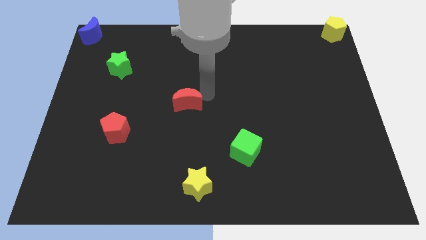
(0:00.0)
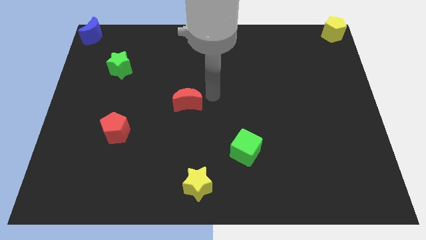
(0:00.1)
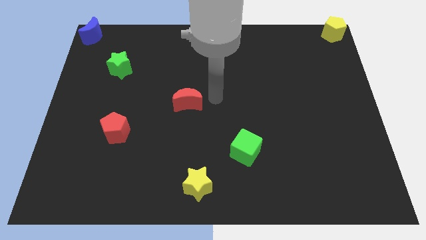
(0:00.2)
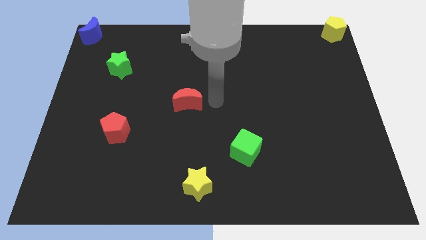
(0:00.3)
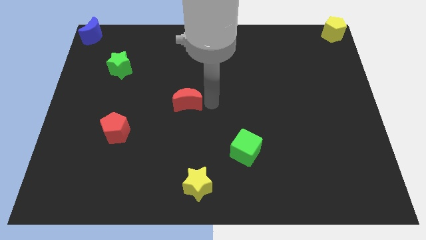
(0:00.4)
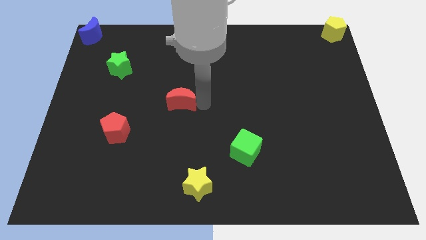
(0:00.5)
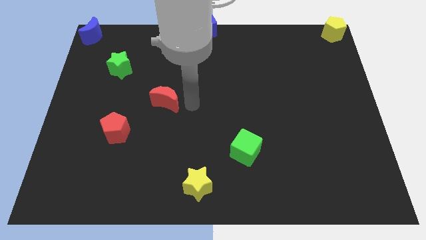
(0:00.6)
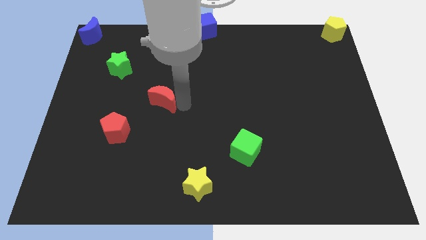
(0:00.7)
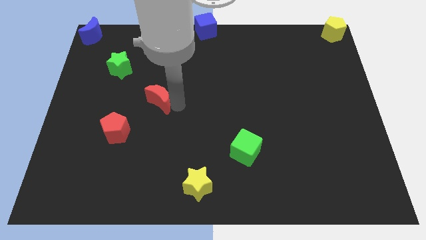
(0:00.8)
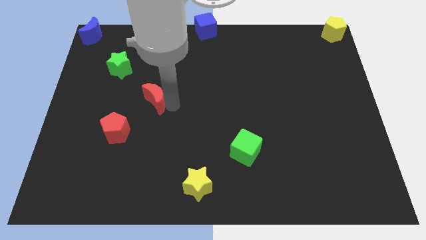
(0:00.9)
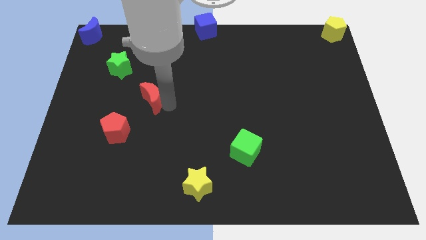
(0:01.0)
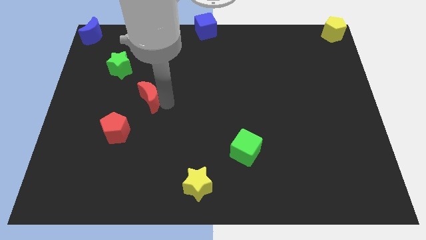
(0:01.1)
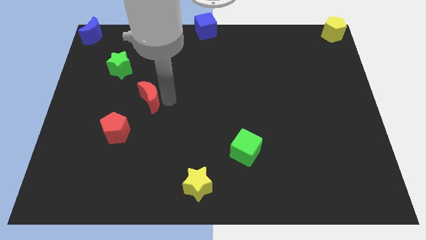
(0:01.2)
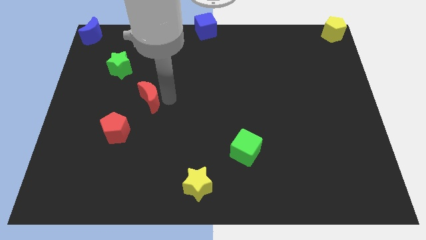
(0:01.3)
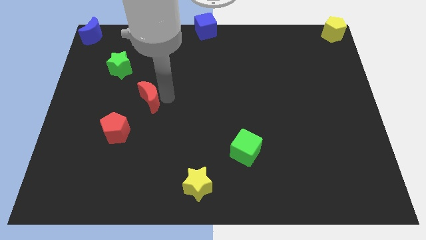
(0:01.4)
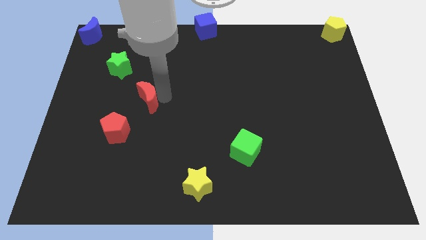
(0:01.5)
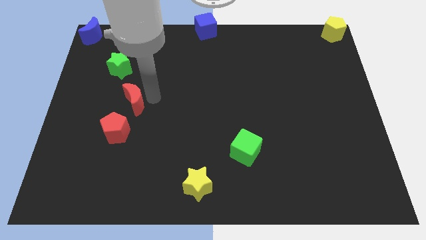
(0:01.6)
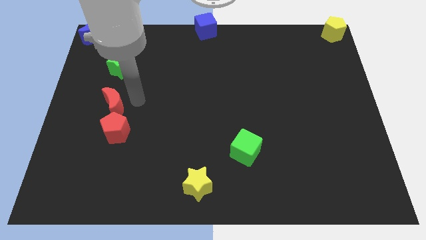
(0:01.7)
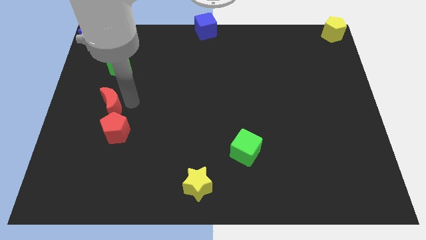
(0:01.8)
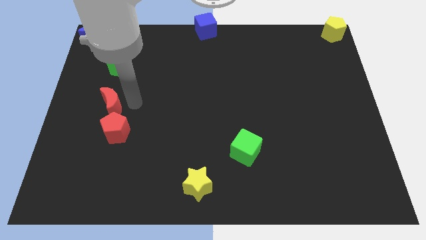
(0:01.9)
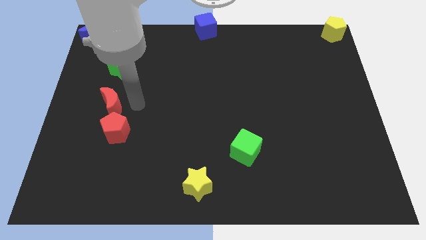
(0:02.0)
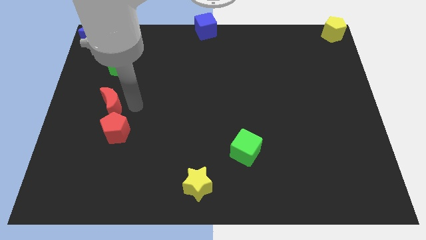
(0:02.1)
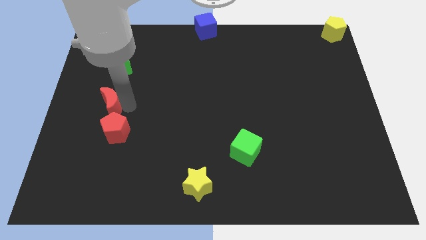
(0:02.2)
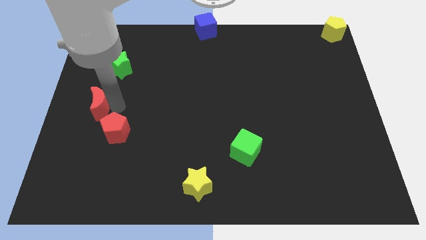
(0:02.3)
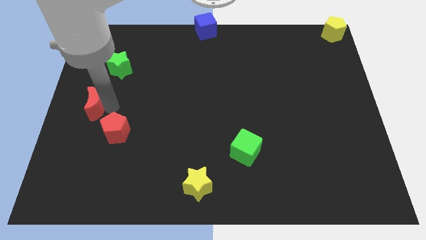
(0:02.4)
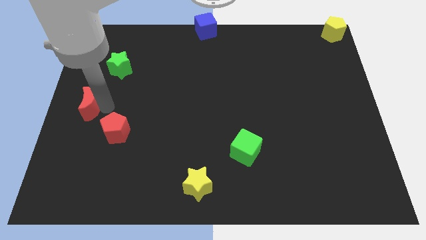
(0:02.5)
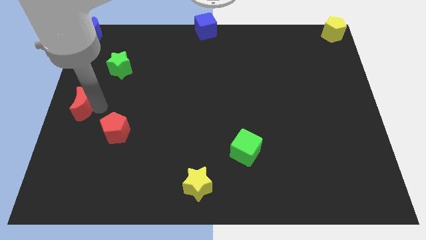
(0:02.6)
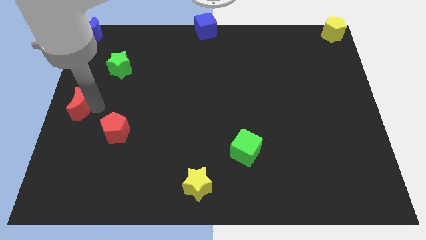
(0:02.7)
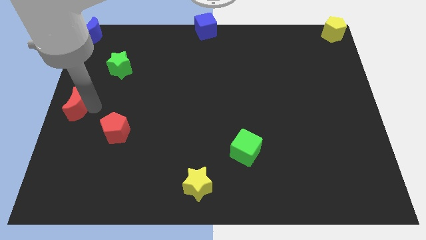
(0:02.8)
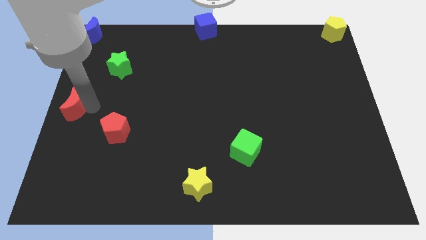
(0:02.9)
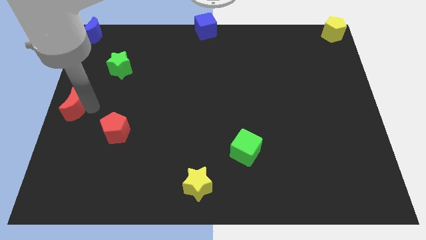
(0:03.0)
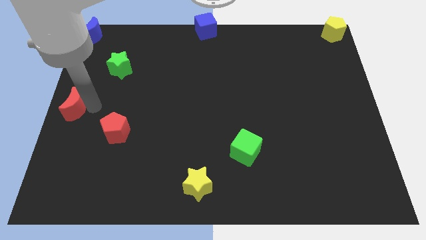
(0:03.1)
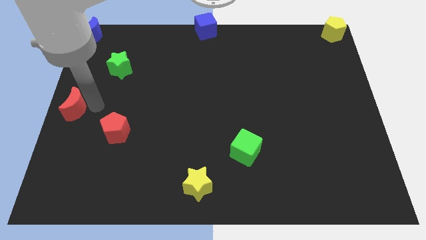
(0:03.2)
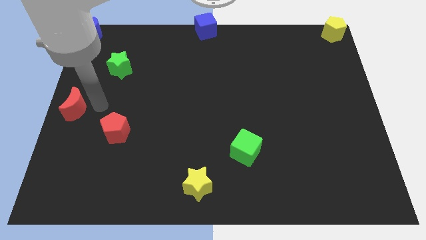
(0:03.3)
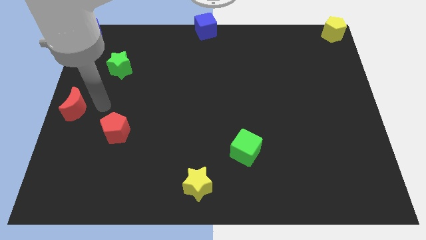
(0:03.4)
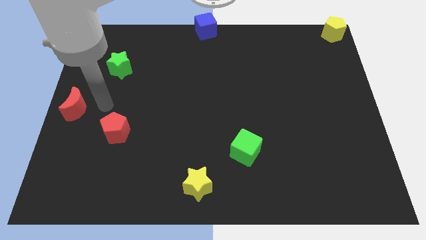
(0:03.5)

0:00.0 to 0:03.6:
slide the red crescent to the center left of the board

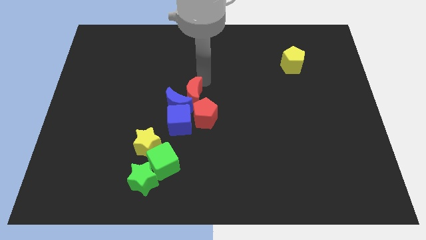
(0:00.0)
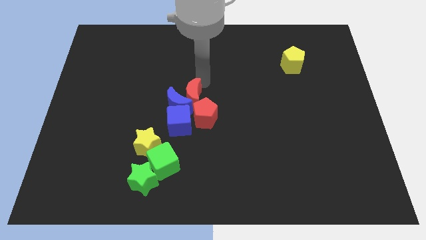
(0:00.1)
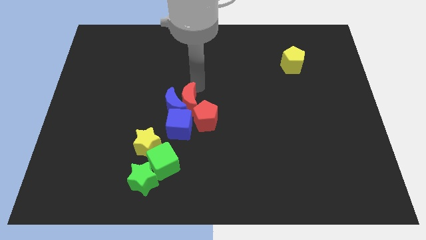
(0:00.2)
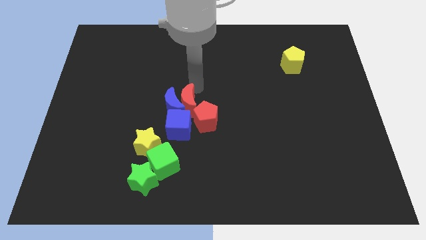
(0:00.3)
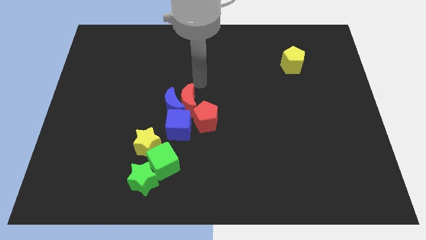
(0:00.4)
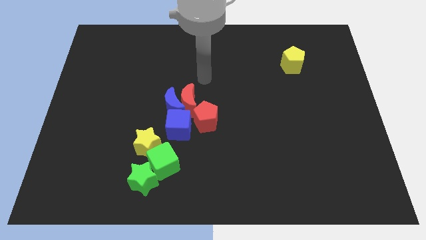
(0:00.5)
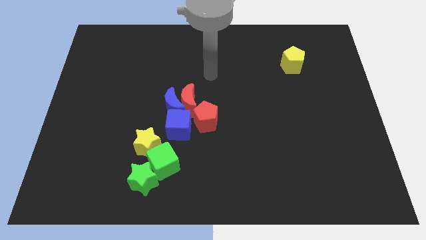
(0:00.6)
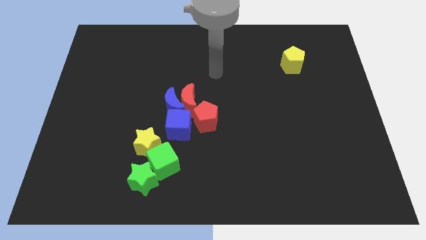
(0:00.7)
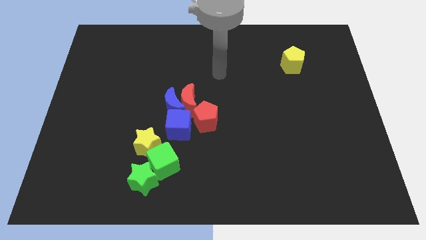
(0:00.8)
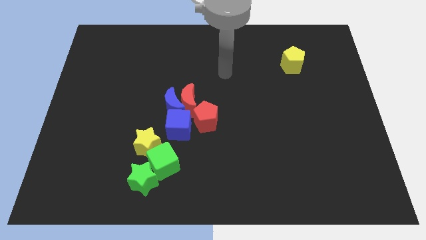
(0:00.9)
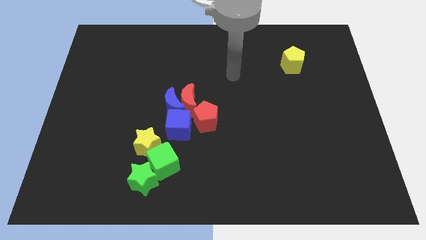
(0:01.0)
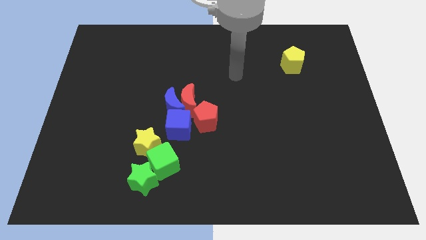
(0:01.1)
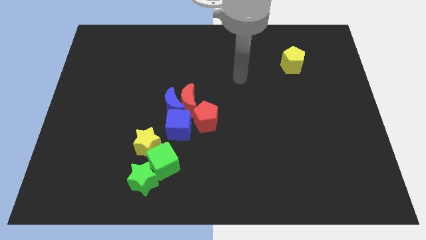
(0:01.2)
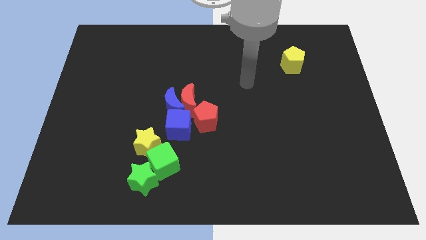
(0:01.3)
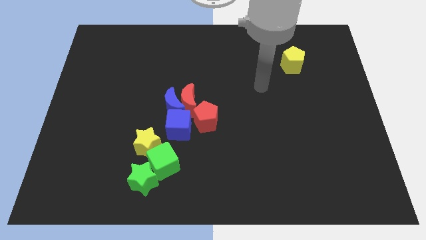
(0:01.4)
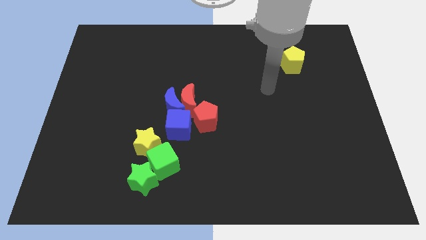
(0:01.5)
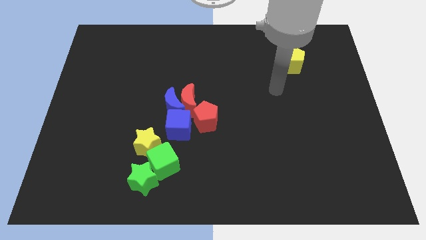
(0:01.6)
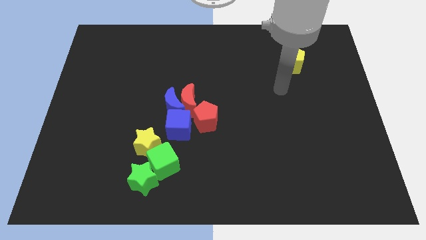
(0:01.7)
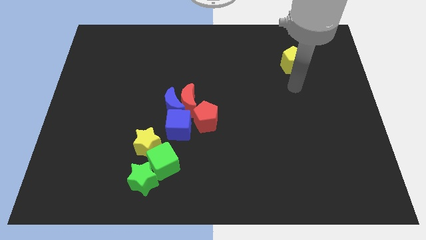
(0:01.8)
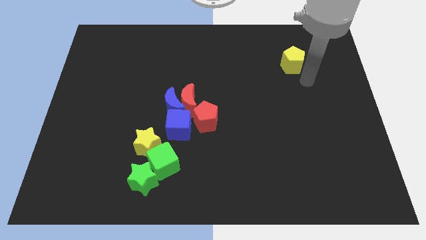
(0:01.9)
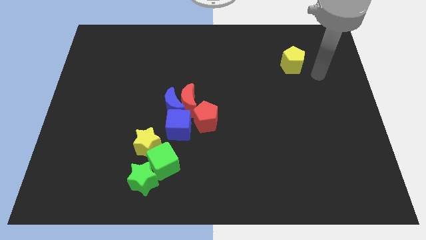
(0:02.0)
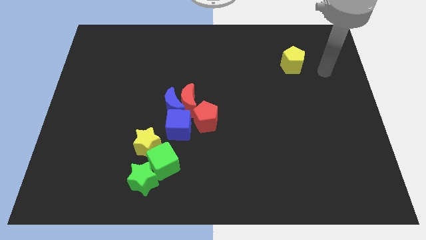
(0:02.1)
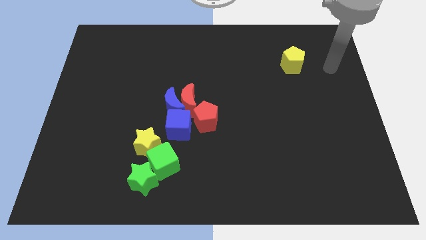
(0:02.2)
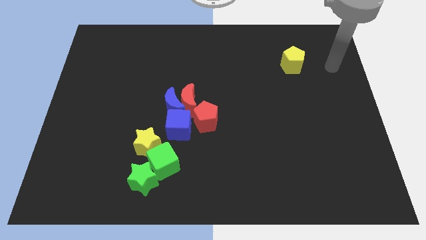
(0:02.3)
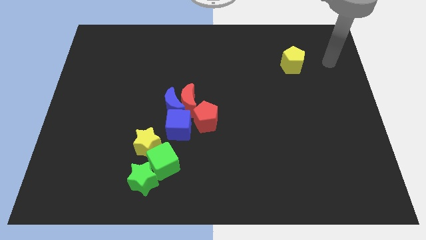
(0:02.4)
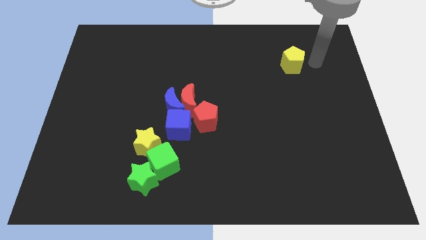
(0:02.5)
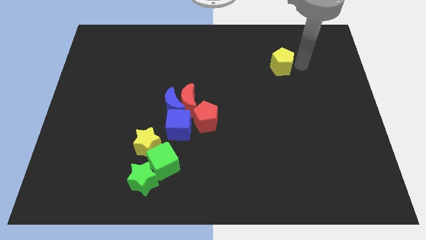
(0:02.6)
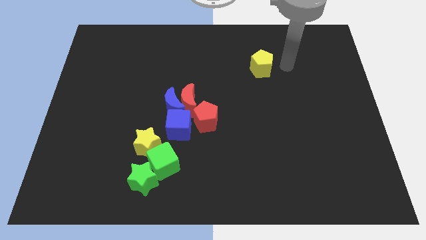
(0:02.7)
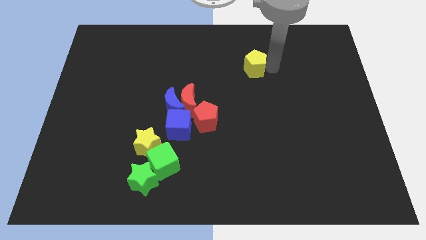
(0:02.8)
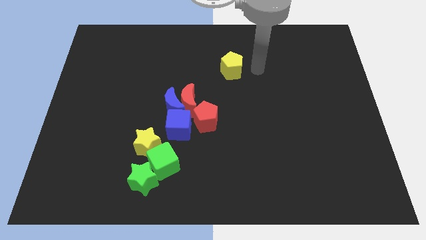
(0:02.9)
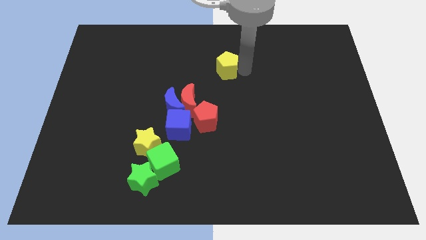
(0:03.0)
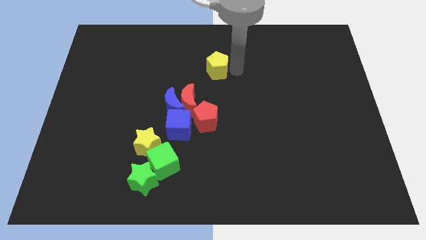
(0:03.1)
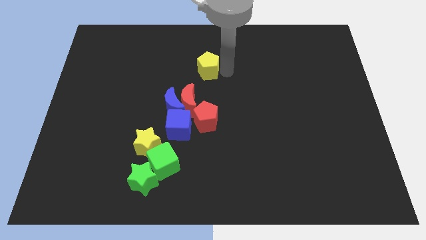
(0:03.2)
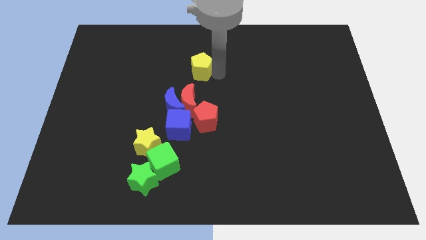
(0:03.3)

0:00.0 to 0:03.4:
move the yellow pentagon above the red crescent

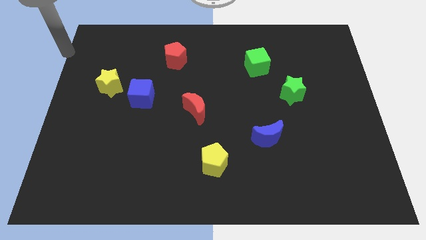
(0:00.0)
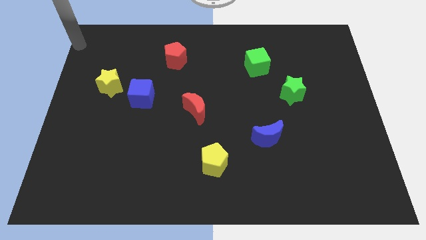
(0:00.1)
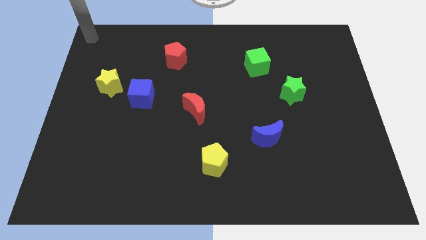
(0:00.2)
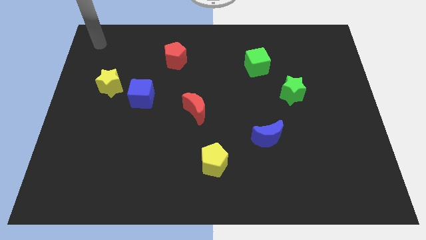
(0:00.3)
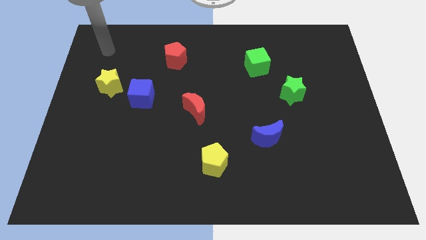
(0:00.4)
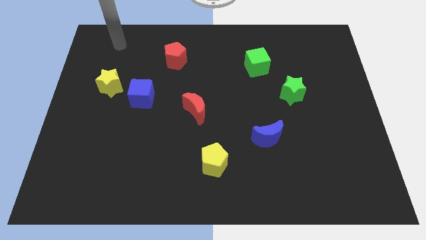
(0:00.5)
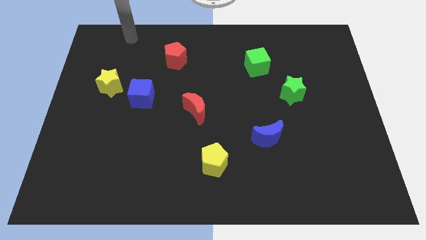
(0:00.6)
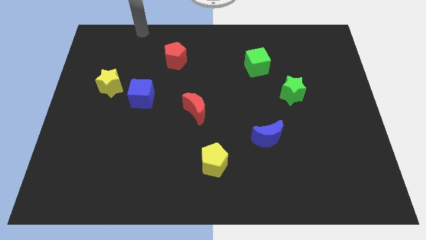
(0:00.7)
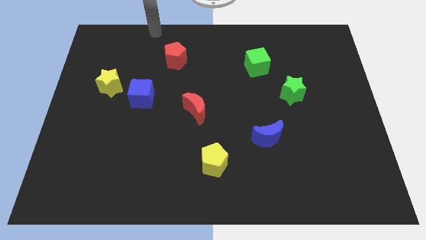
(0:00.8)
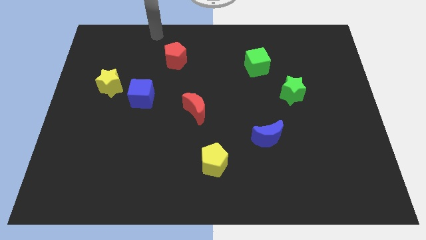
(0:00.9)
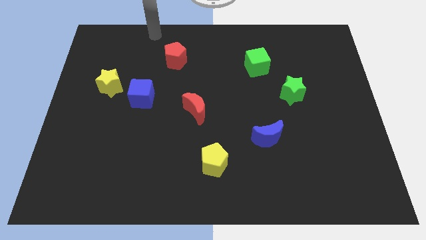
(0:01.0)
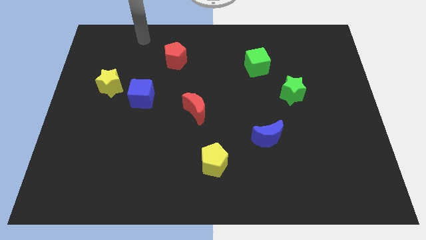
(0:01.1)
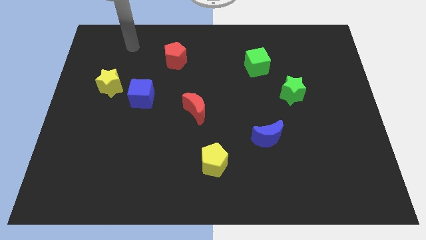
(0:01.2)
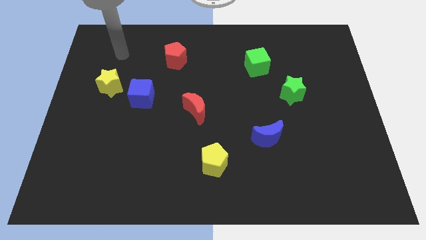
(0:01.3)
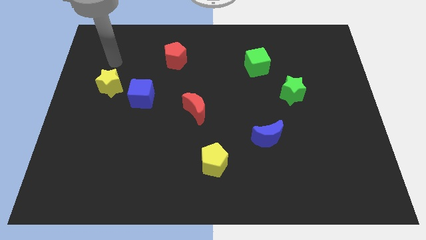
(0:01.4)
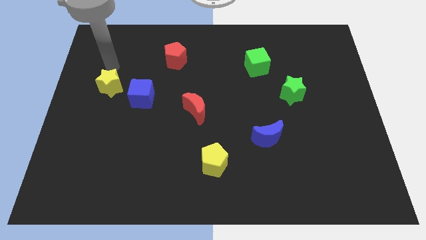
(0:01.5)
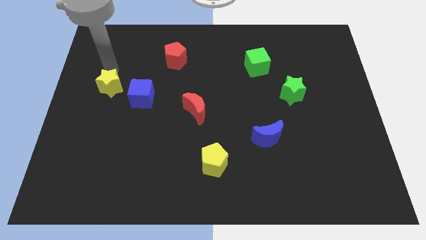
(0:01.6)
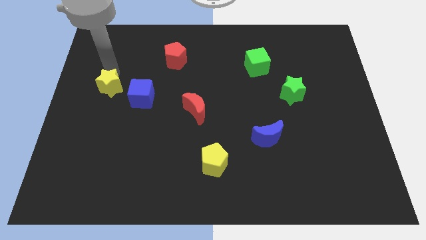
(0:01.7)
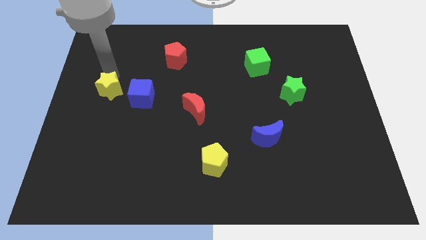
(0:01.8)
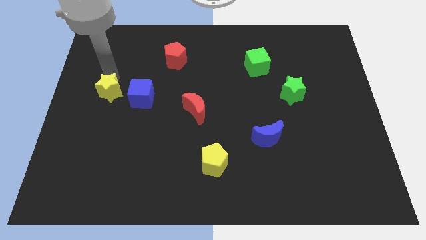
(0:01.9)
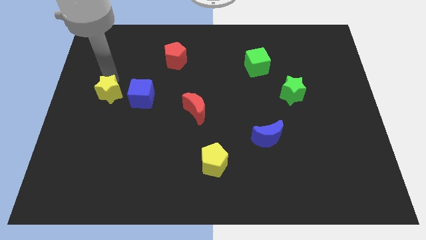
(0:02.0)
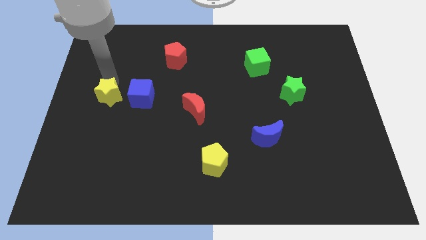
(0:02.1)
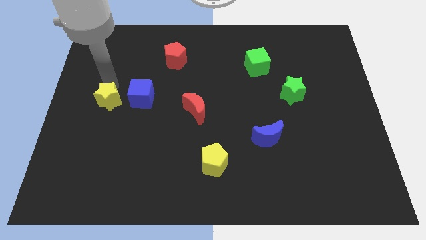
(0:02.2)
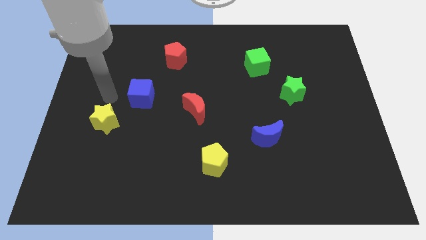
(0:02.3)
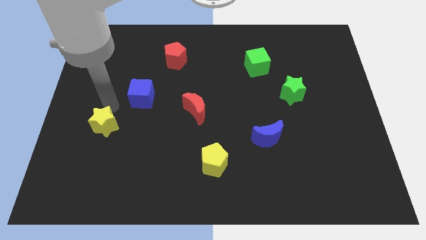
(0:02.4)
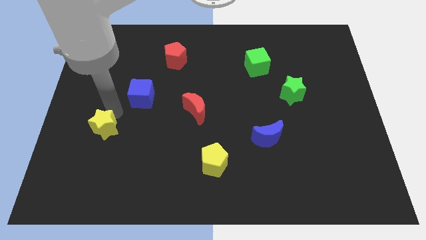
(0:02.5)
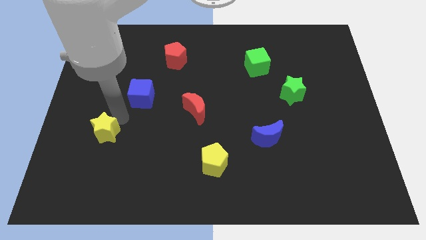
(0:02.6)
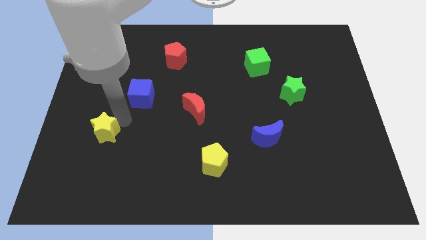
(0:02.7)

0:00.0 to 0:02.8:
slide the yellow star to the bottom side
